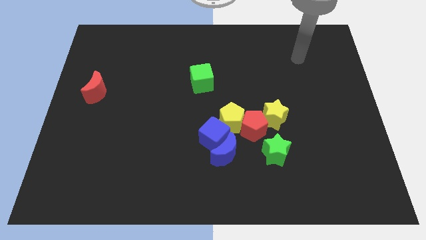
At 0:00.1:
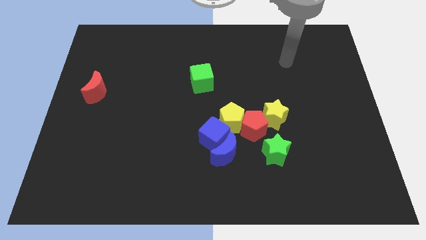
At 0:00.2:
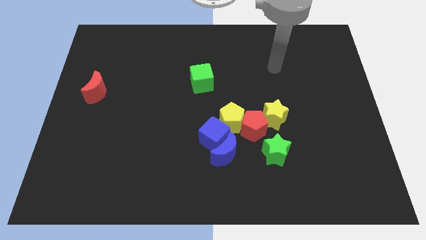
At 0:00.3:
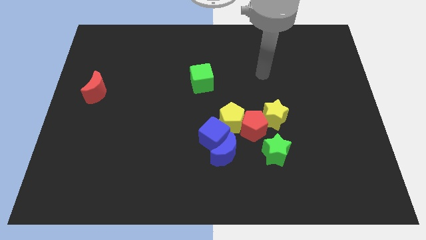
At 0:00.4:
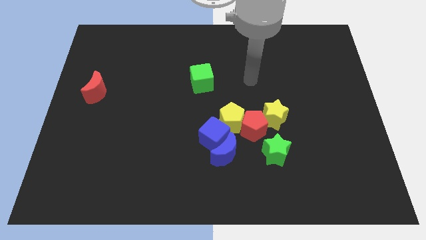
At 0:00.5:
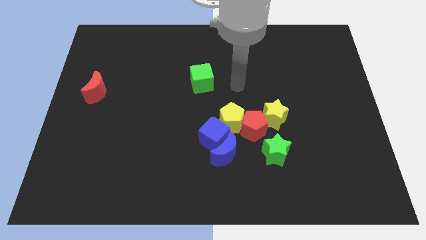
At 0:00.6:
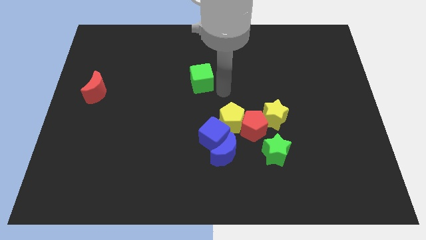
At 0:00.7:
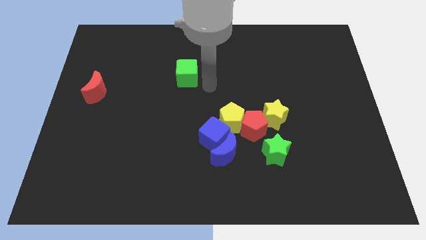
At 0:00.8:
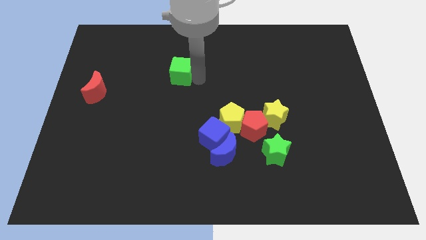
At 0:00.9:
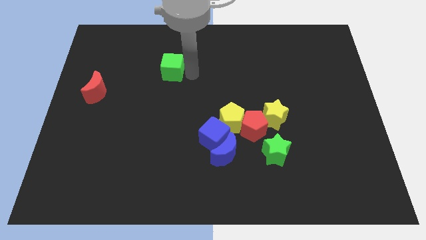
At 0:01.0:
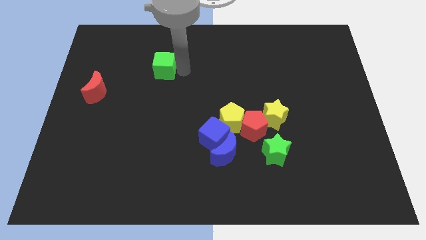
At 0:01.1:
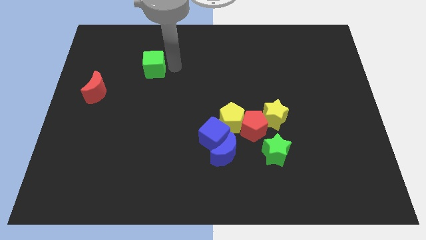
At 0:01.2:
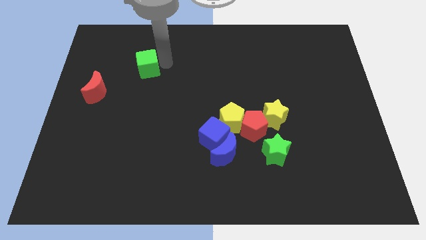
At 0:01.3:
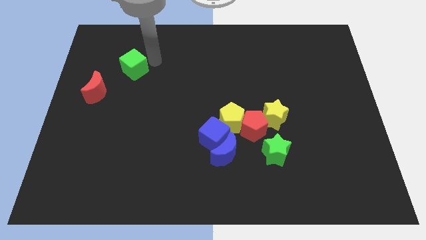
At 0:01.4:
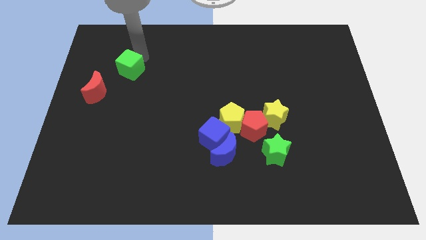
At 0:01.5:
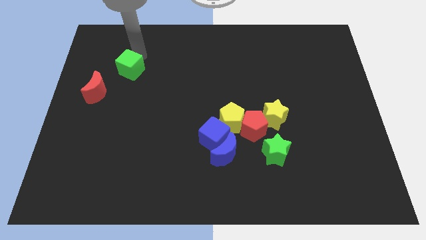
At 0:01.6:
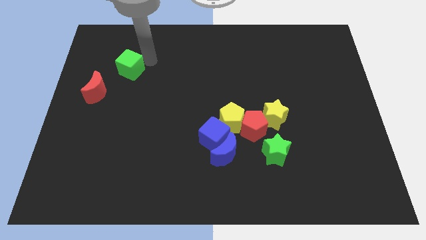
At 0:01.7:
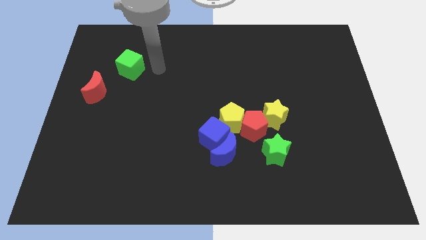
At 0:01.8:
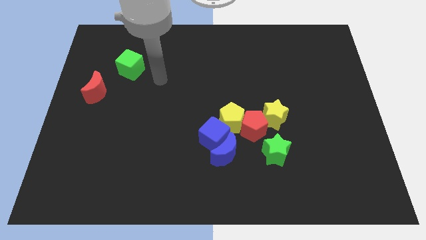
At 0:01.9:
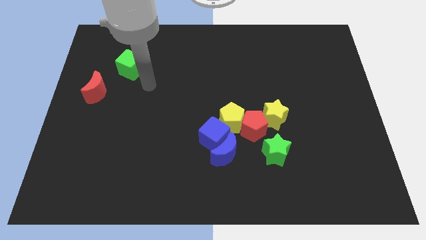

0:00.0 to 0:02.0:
move green cube to the top left

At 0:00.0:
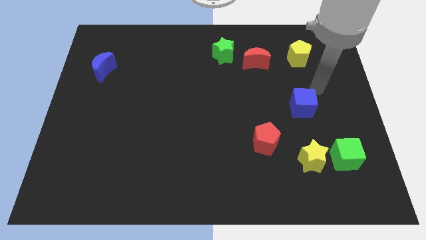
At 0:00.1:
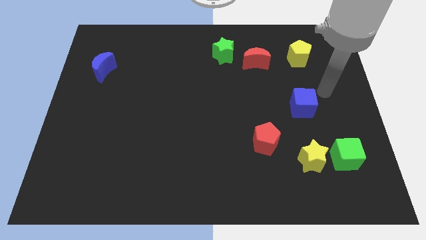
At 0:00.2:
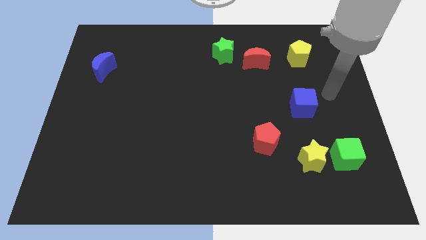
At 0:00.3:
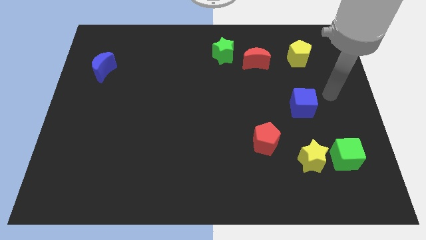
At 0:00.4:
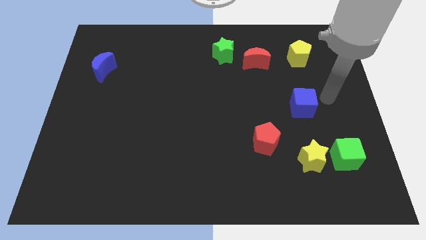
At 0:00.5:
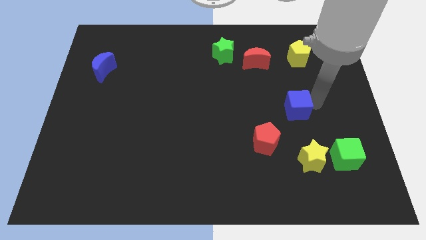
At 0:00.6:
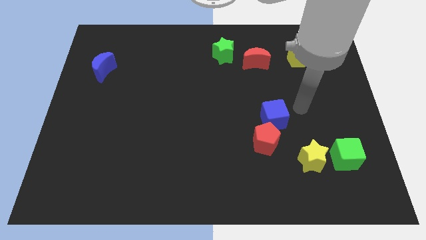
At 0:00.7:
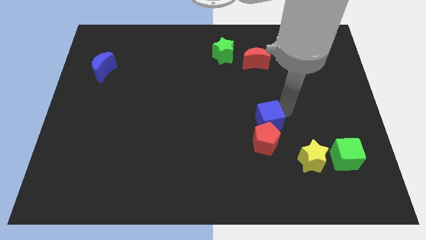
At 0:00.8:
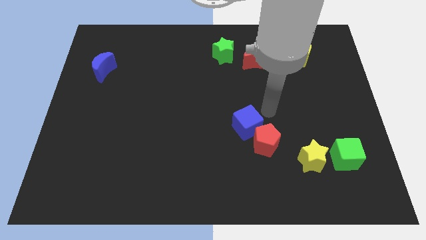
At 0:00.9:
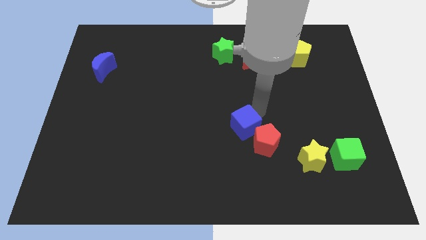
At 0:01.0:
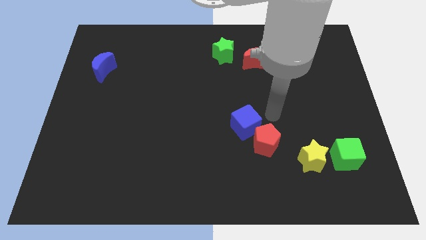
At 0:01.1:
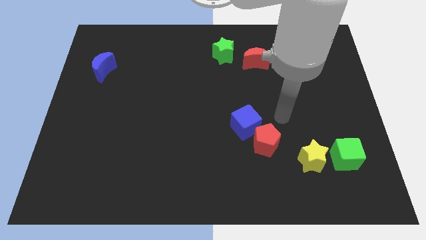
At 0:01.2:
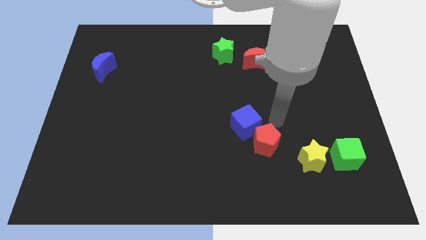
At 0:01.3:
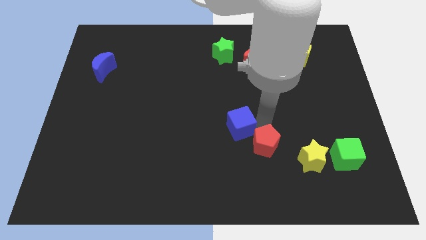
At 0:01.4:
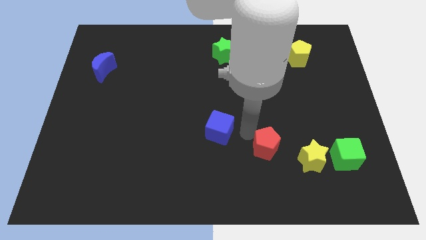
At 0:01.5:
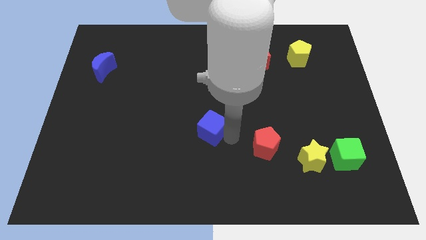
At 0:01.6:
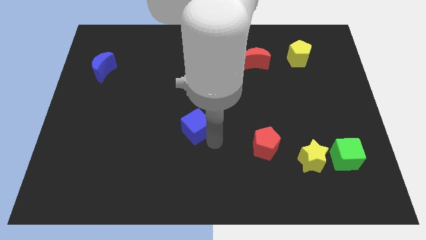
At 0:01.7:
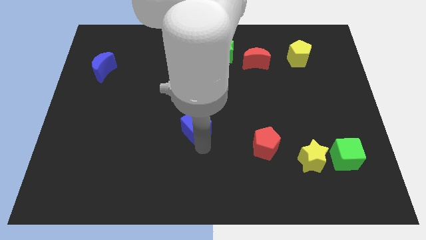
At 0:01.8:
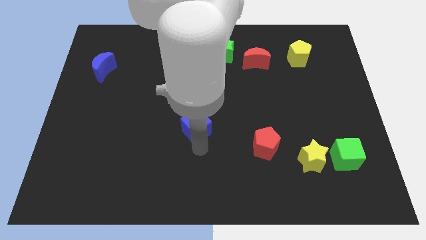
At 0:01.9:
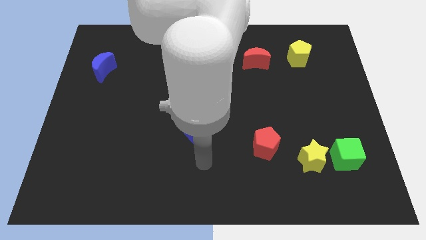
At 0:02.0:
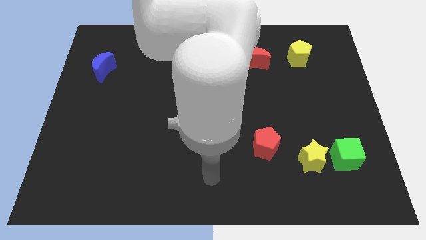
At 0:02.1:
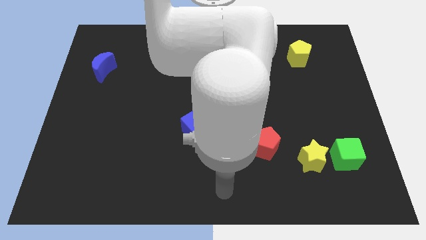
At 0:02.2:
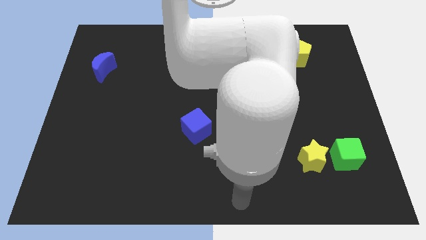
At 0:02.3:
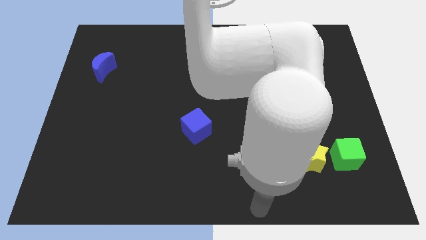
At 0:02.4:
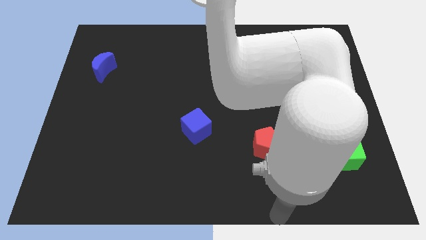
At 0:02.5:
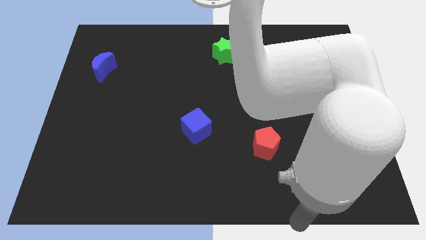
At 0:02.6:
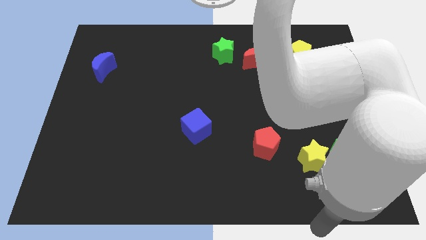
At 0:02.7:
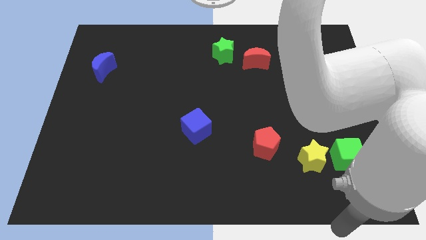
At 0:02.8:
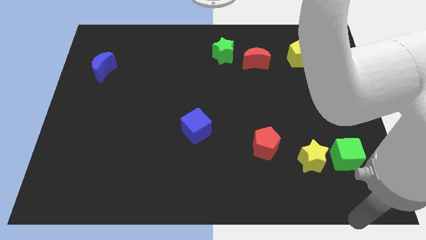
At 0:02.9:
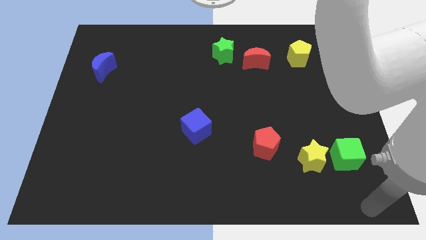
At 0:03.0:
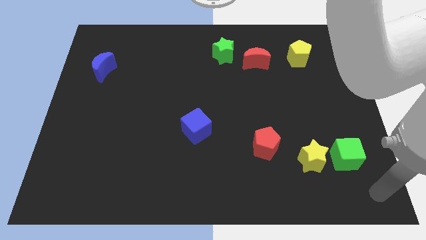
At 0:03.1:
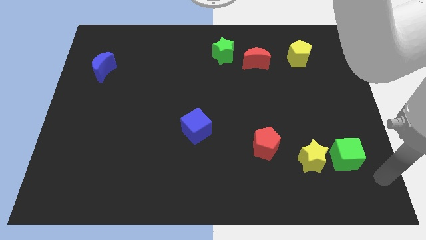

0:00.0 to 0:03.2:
push the blue cube towards the left side of the red pentagon and go away

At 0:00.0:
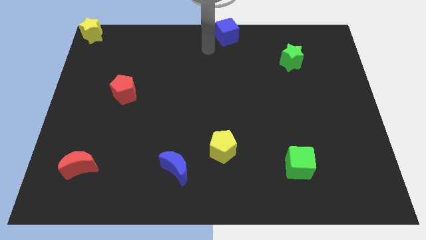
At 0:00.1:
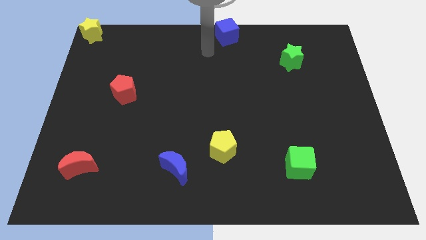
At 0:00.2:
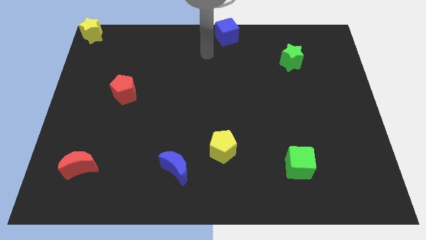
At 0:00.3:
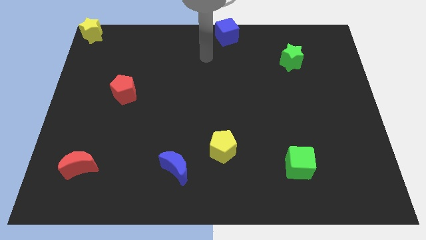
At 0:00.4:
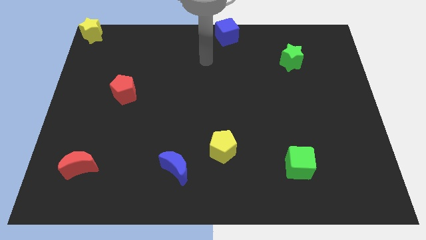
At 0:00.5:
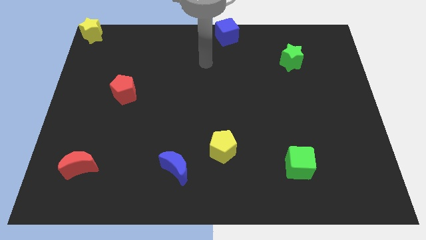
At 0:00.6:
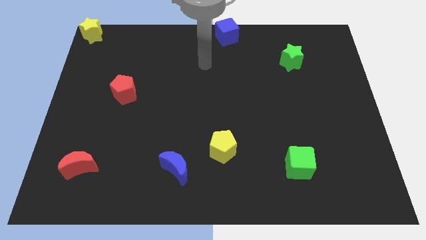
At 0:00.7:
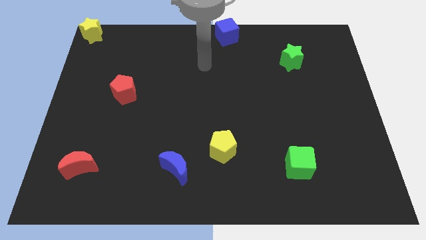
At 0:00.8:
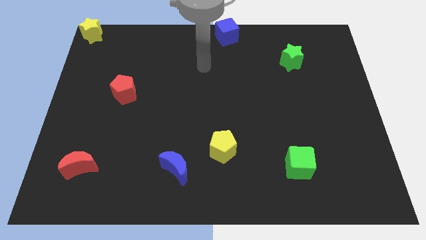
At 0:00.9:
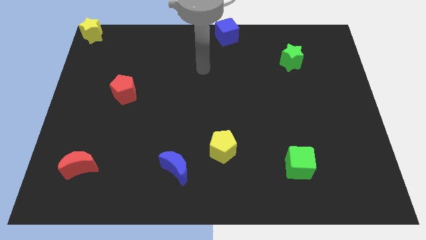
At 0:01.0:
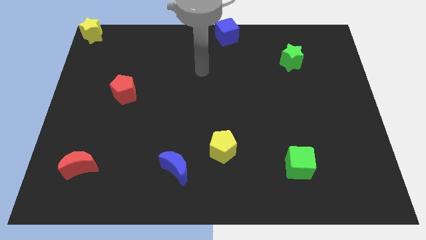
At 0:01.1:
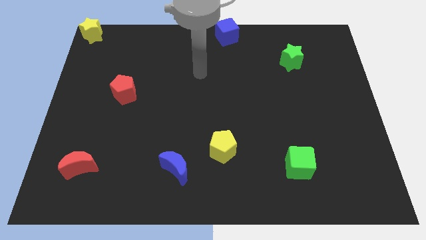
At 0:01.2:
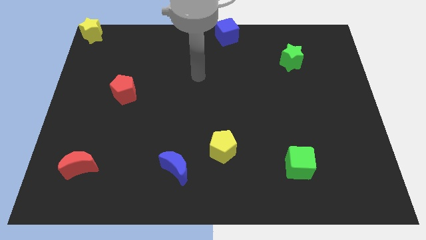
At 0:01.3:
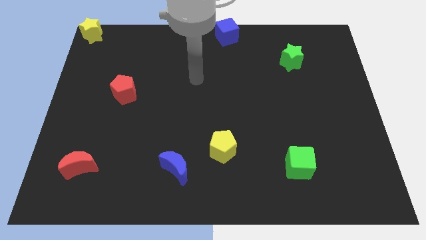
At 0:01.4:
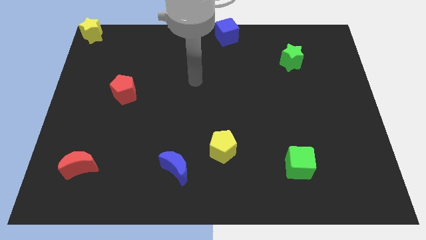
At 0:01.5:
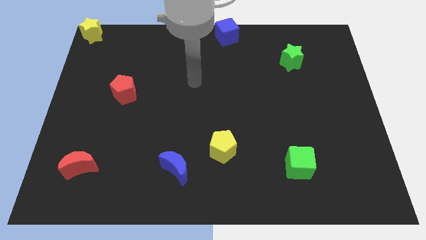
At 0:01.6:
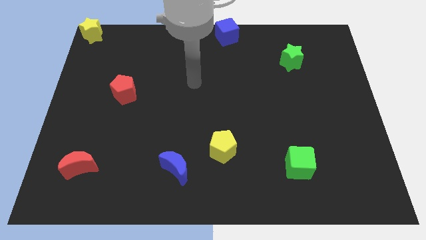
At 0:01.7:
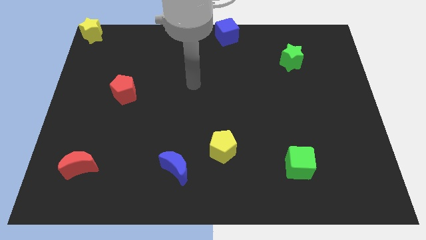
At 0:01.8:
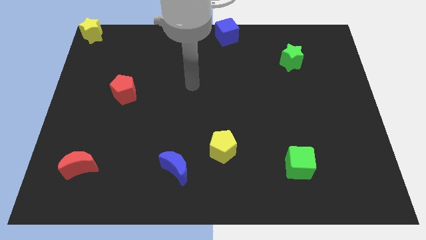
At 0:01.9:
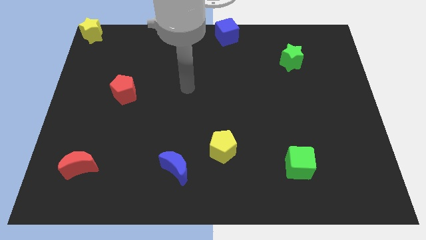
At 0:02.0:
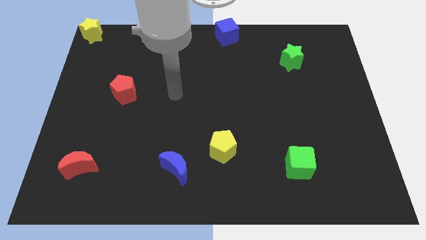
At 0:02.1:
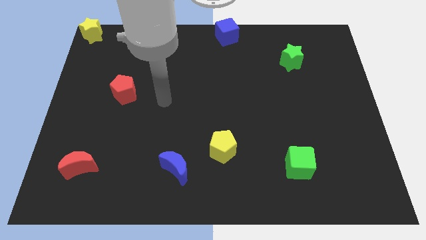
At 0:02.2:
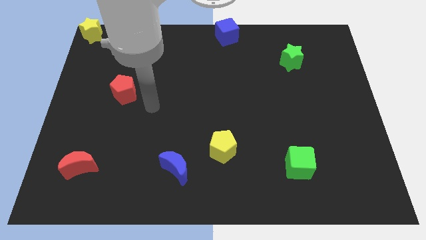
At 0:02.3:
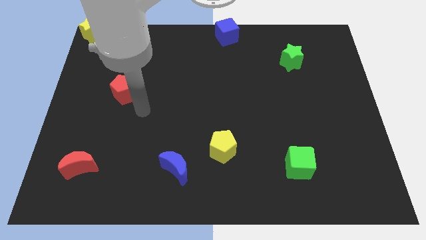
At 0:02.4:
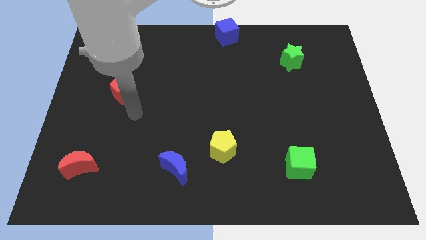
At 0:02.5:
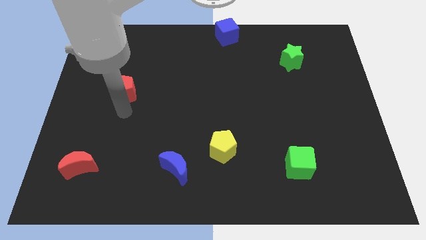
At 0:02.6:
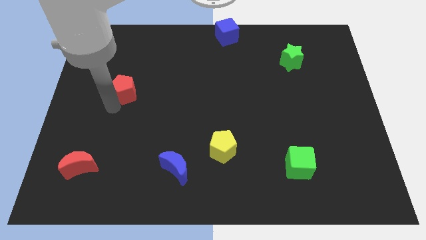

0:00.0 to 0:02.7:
place your hand close to the red pentagon

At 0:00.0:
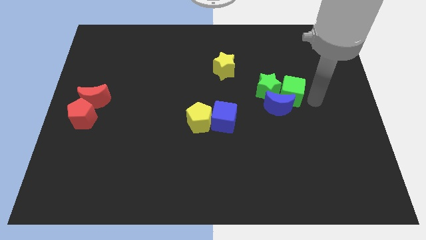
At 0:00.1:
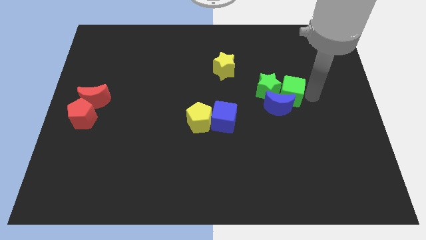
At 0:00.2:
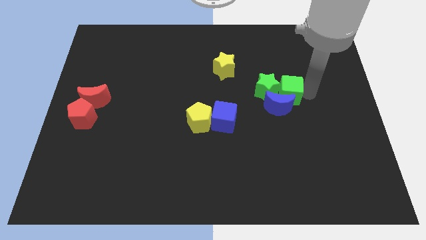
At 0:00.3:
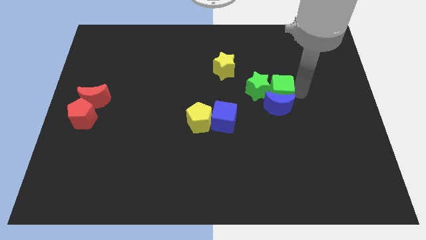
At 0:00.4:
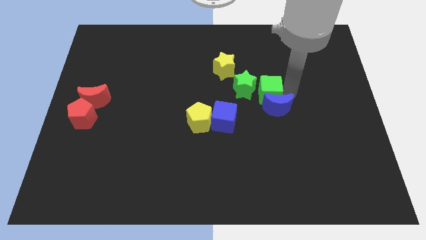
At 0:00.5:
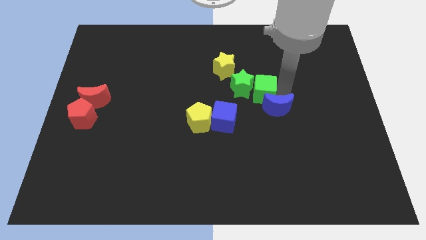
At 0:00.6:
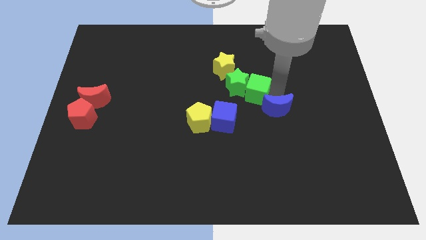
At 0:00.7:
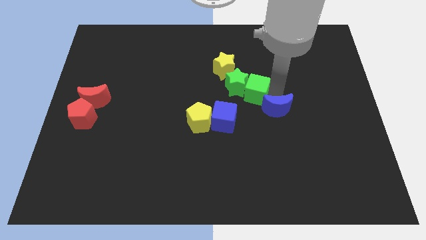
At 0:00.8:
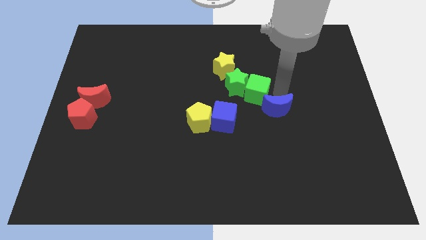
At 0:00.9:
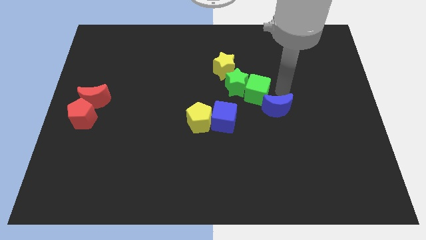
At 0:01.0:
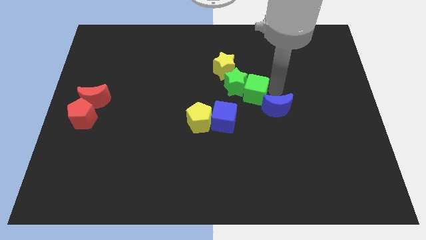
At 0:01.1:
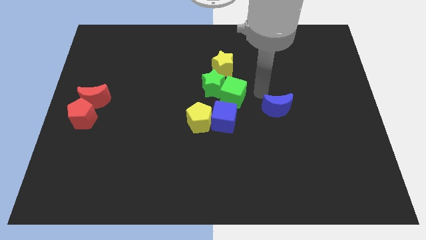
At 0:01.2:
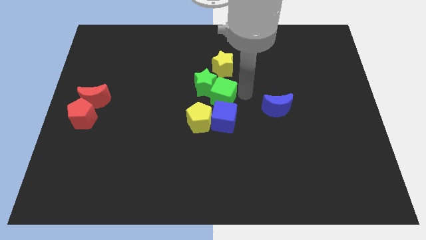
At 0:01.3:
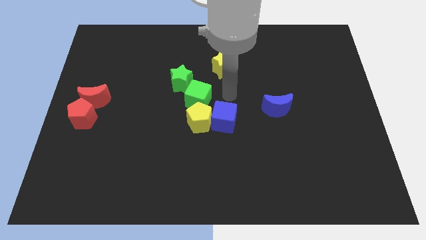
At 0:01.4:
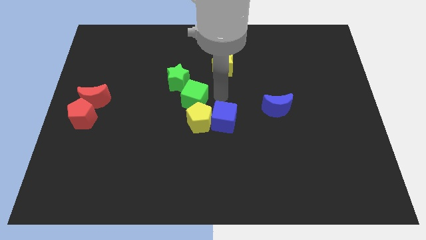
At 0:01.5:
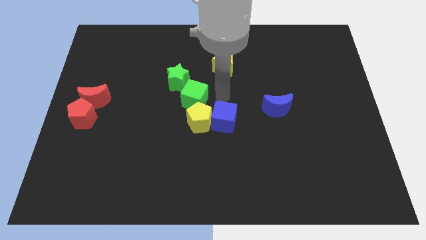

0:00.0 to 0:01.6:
push the green cube into the green star to the top of the yellow pentagon
